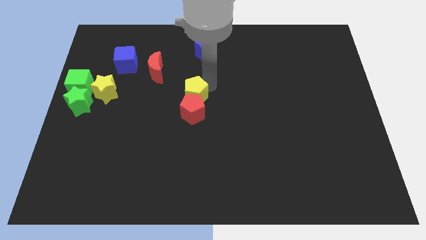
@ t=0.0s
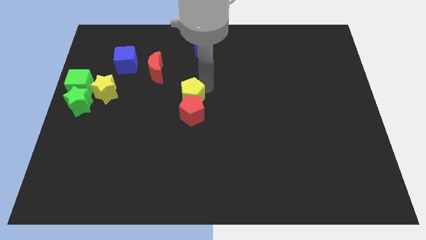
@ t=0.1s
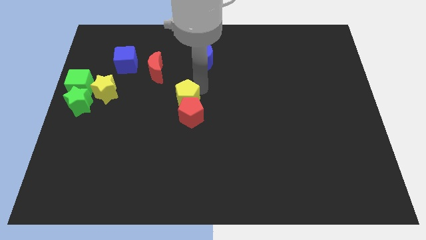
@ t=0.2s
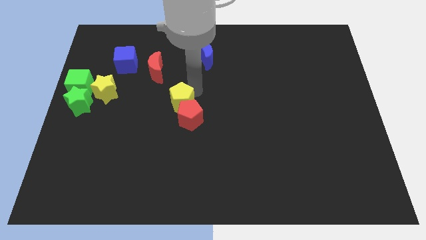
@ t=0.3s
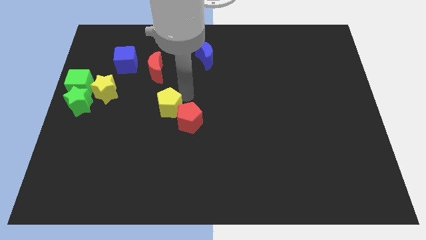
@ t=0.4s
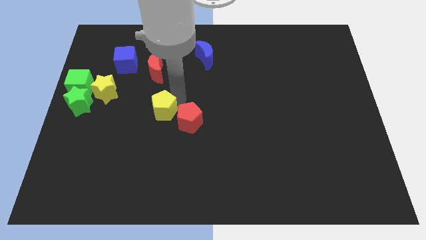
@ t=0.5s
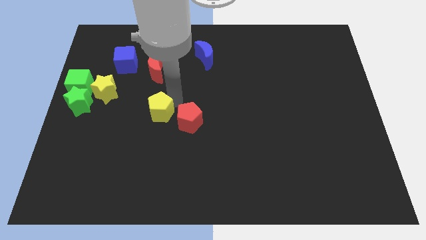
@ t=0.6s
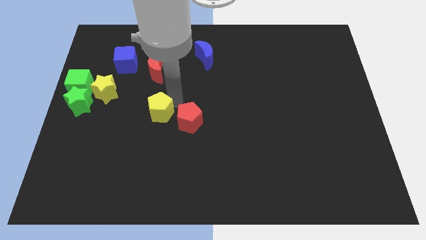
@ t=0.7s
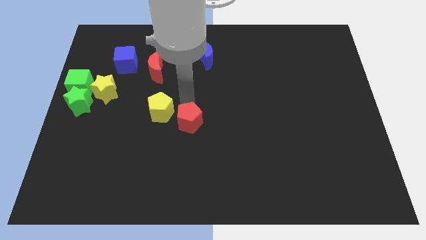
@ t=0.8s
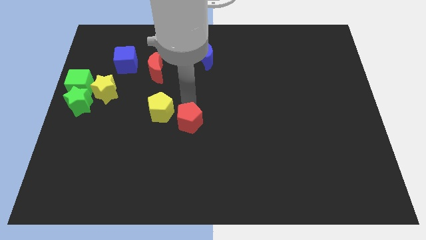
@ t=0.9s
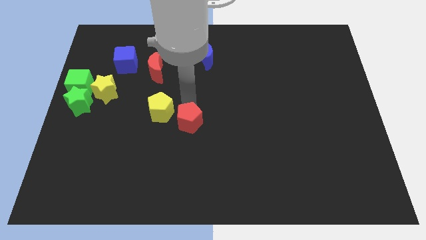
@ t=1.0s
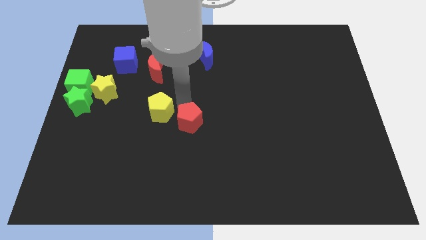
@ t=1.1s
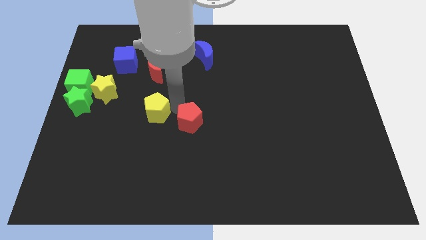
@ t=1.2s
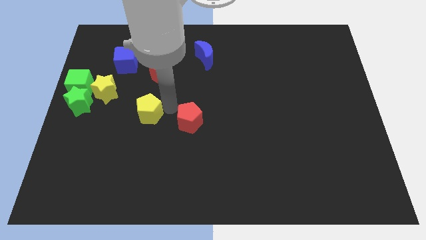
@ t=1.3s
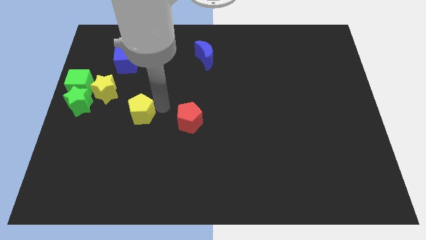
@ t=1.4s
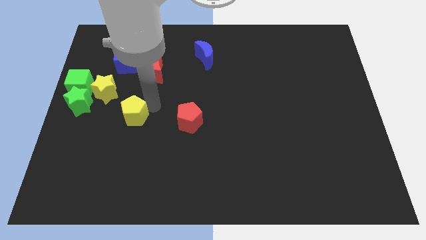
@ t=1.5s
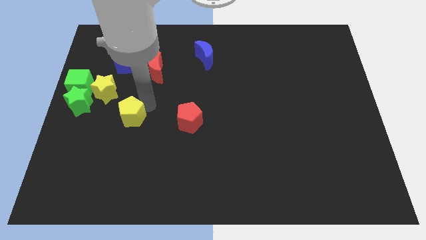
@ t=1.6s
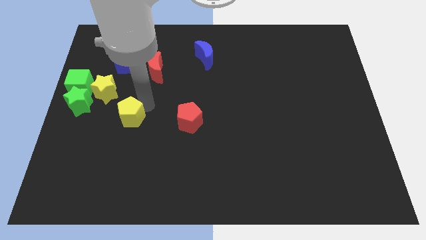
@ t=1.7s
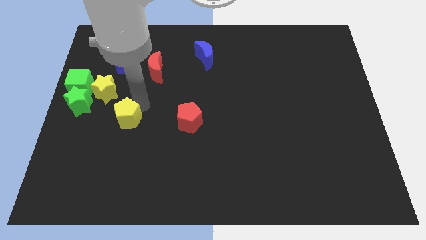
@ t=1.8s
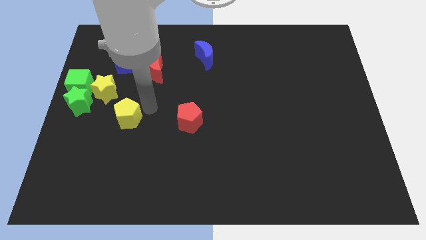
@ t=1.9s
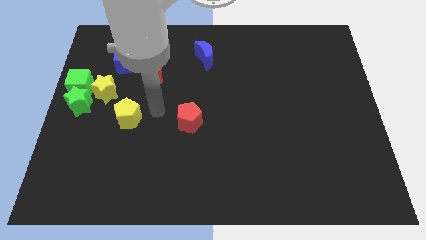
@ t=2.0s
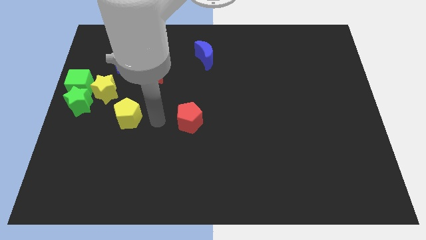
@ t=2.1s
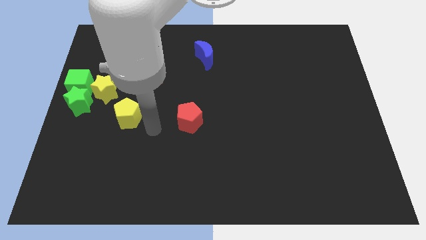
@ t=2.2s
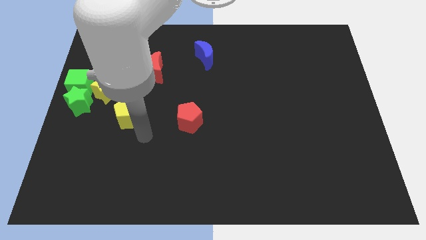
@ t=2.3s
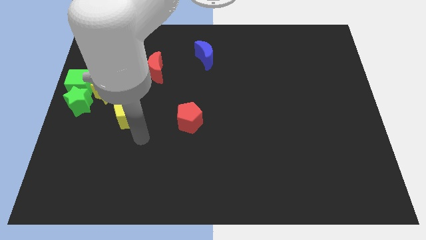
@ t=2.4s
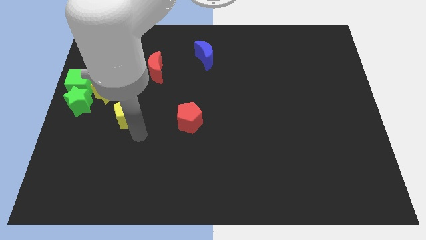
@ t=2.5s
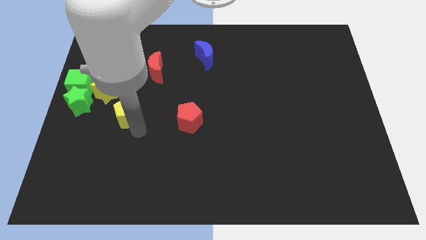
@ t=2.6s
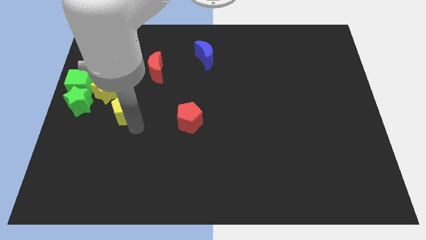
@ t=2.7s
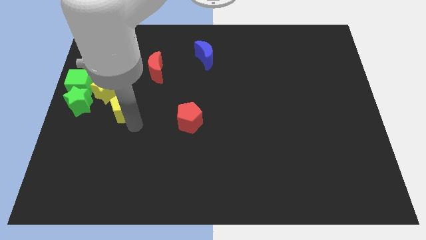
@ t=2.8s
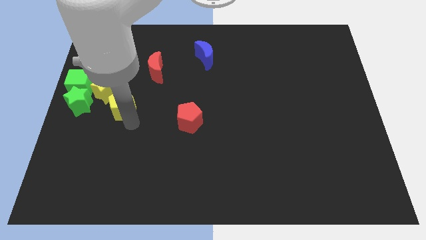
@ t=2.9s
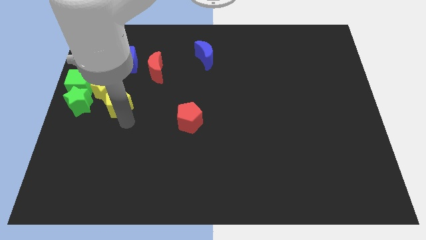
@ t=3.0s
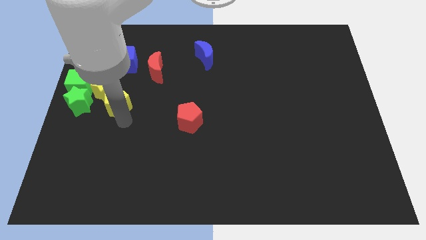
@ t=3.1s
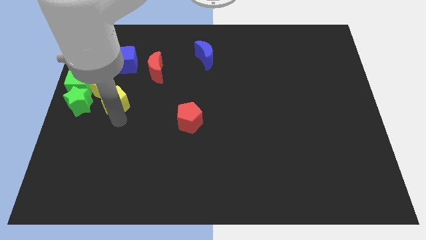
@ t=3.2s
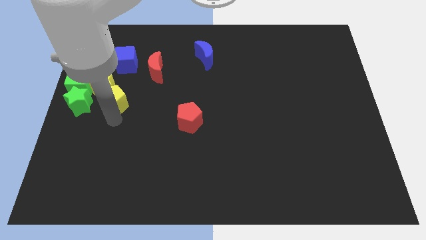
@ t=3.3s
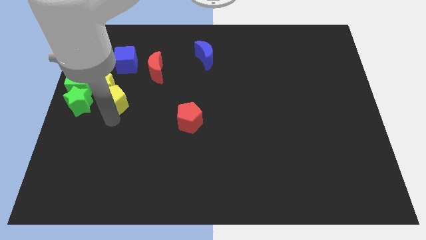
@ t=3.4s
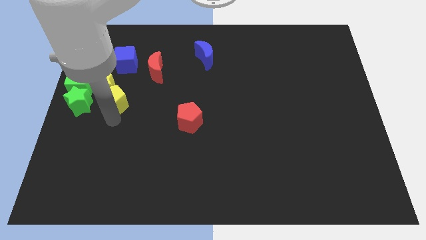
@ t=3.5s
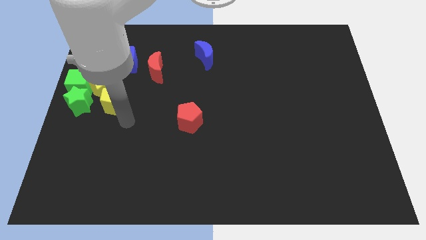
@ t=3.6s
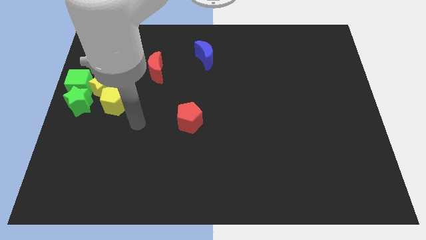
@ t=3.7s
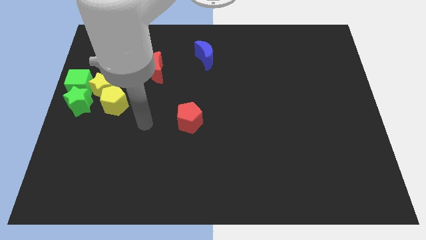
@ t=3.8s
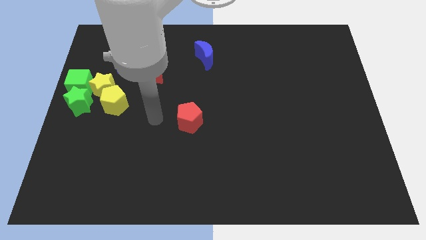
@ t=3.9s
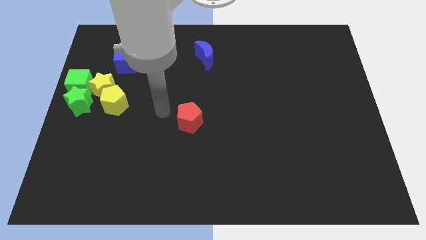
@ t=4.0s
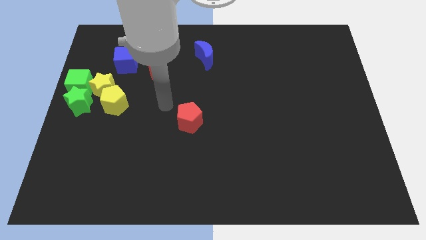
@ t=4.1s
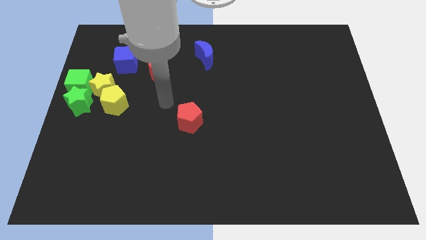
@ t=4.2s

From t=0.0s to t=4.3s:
push the yellow pentagon into the bottom right side of the yellow star

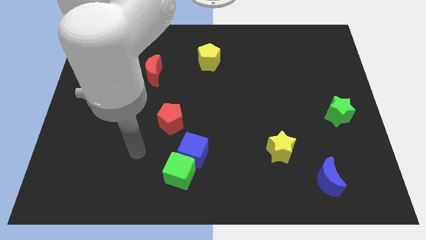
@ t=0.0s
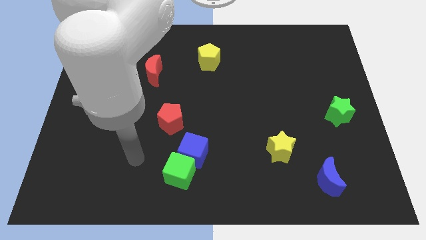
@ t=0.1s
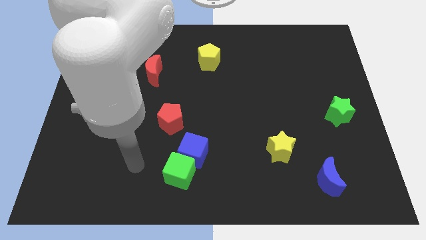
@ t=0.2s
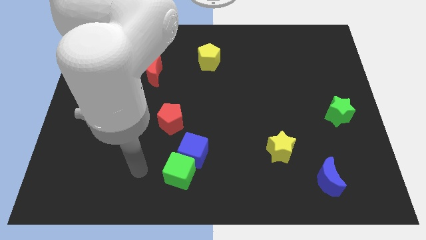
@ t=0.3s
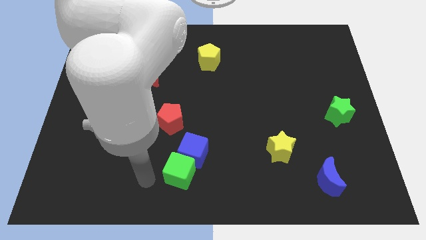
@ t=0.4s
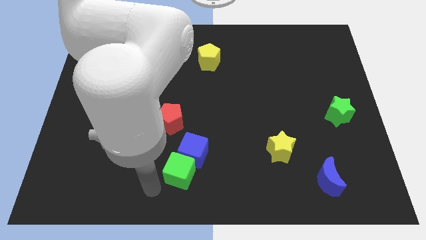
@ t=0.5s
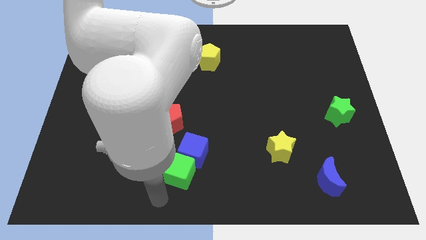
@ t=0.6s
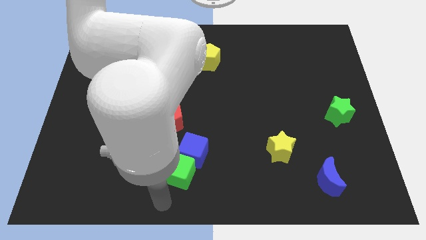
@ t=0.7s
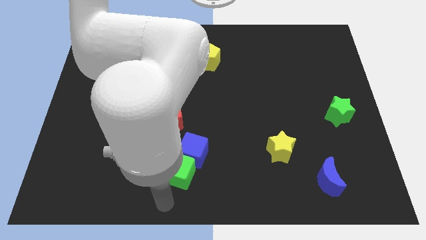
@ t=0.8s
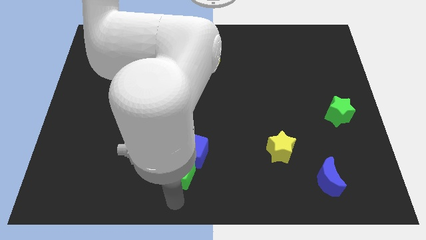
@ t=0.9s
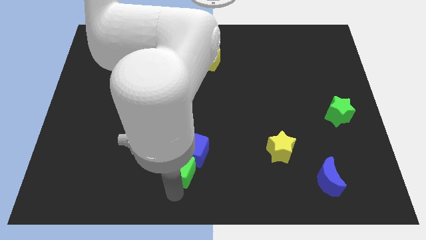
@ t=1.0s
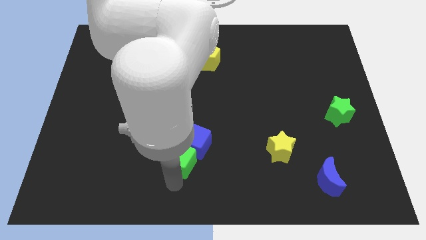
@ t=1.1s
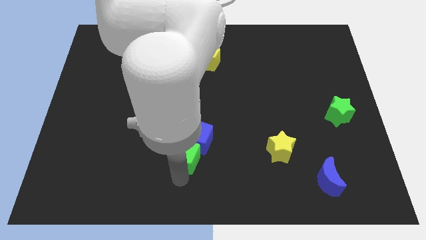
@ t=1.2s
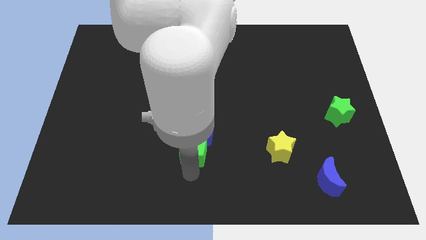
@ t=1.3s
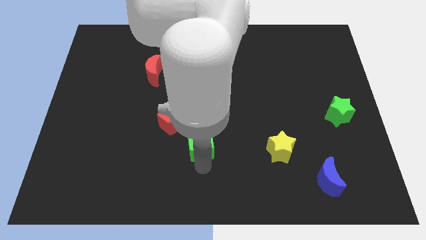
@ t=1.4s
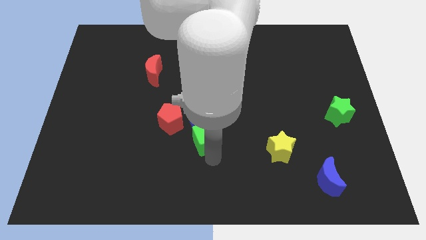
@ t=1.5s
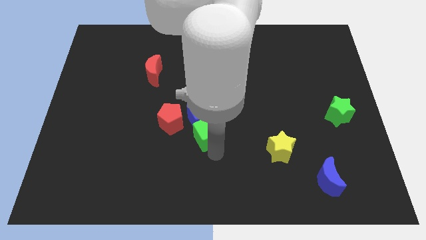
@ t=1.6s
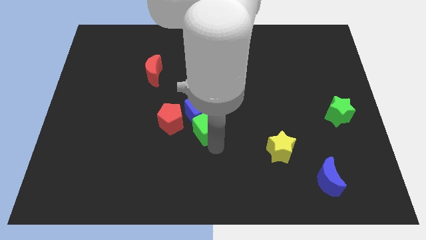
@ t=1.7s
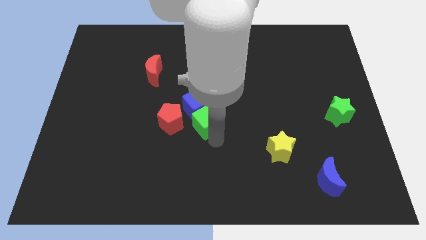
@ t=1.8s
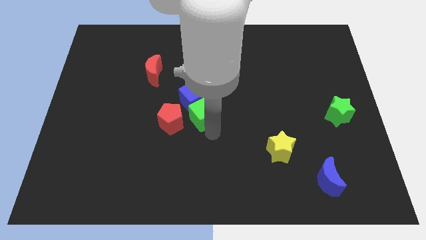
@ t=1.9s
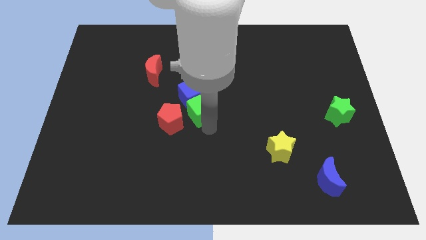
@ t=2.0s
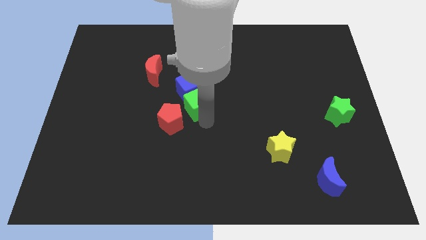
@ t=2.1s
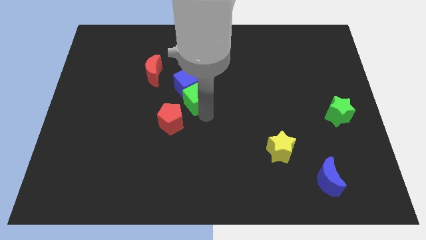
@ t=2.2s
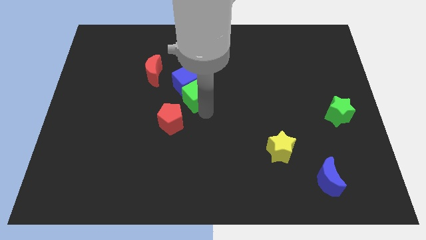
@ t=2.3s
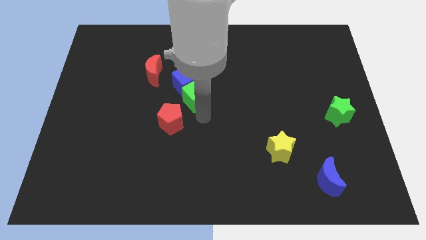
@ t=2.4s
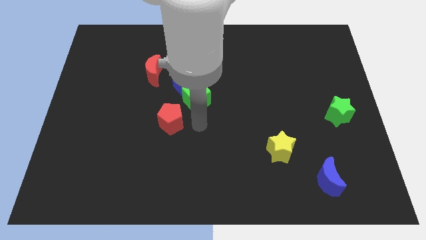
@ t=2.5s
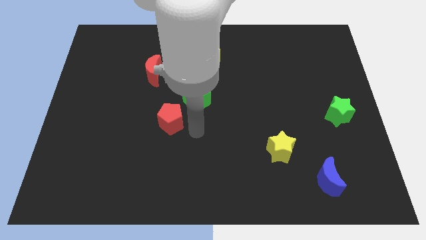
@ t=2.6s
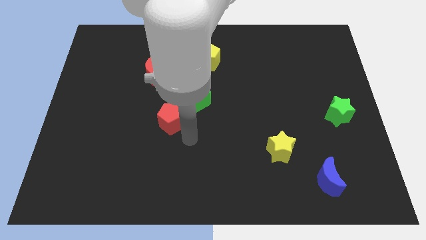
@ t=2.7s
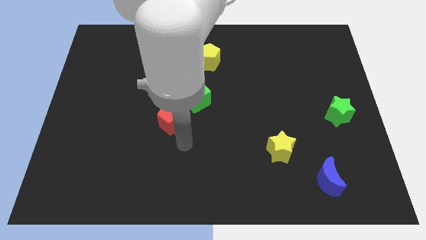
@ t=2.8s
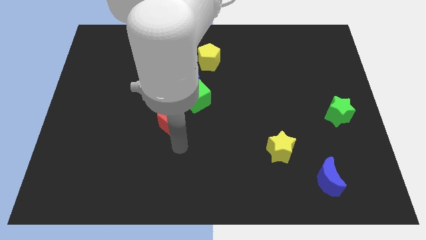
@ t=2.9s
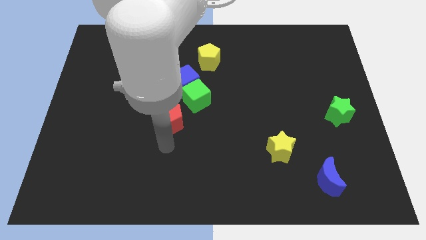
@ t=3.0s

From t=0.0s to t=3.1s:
move the green cube to the upwards along with the blue cube

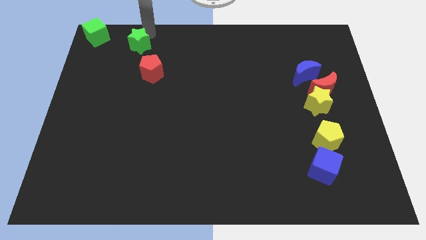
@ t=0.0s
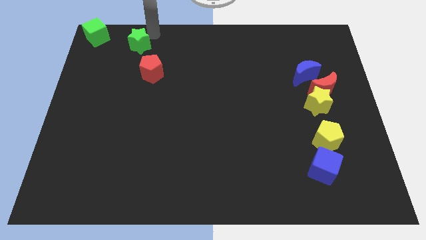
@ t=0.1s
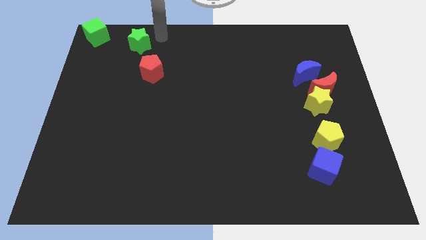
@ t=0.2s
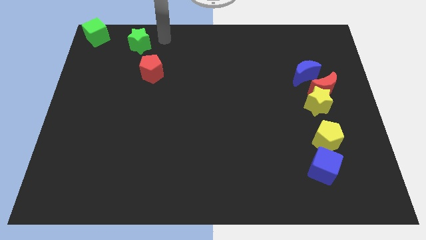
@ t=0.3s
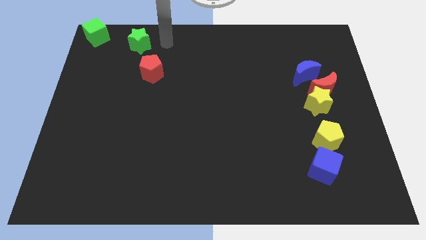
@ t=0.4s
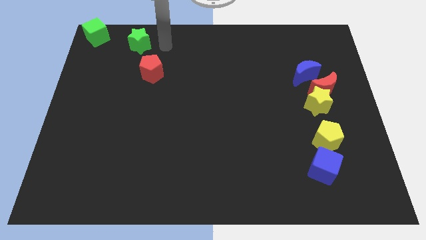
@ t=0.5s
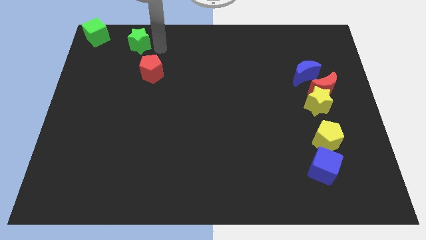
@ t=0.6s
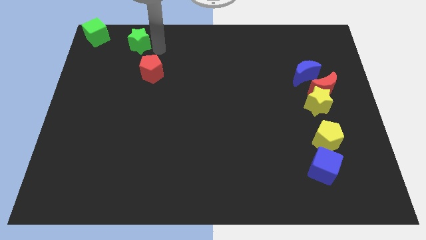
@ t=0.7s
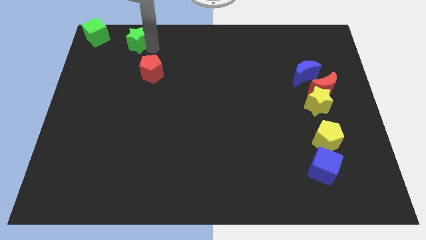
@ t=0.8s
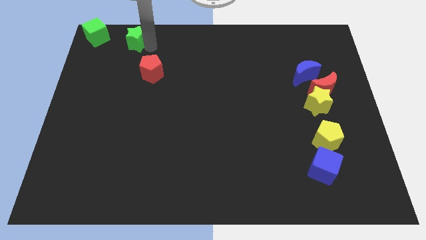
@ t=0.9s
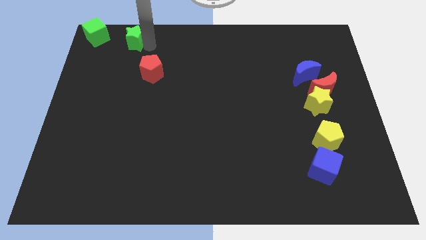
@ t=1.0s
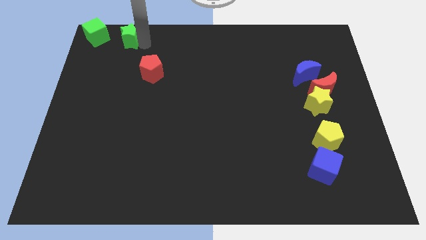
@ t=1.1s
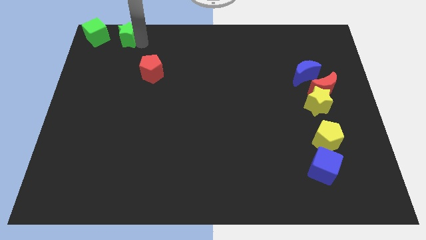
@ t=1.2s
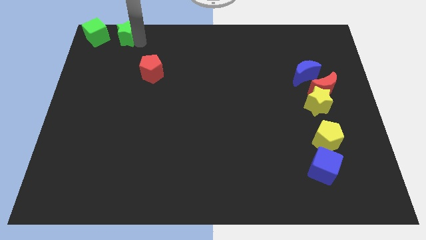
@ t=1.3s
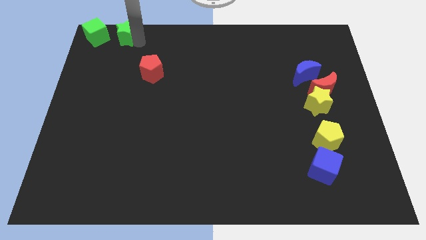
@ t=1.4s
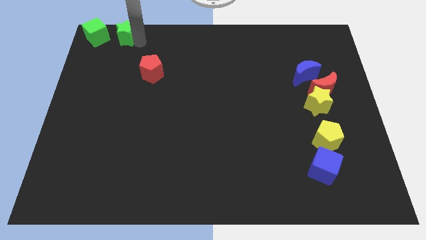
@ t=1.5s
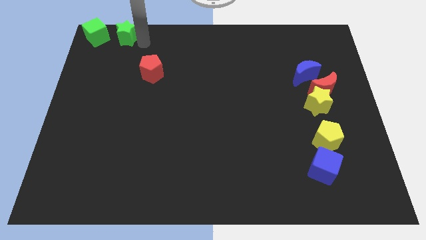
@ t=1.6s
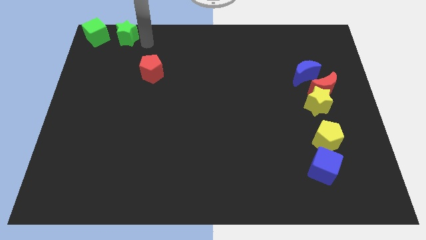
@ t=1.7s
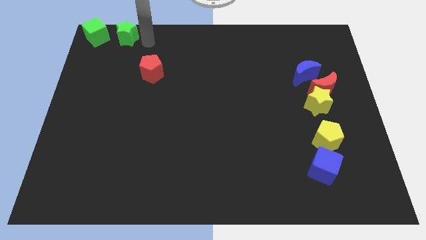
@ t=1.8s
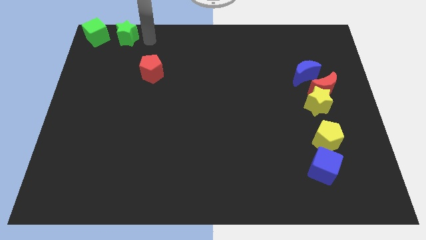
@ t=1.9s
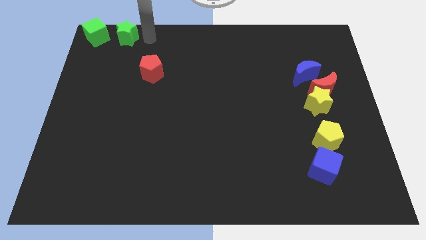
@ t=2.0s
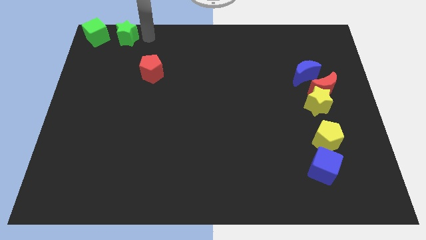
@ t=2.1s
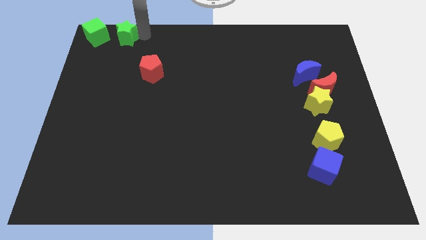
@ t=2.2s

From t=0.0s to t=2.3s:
move the green star to the top left corner of the board
